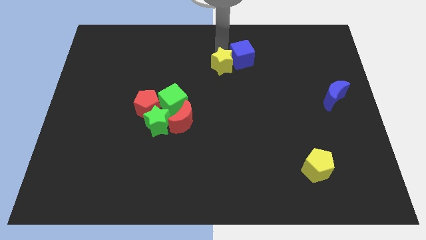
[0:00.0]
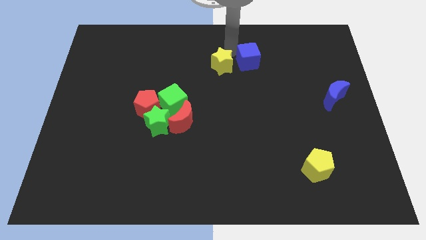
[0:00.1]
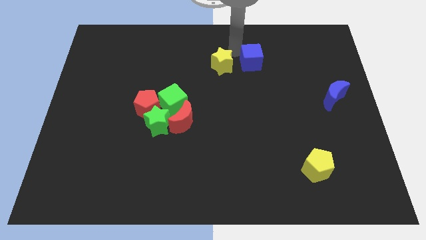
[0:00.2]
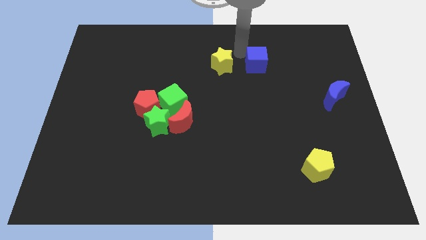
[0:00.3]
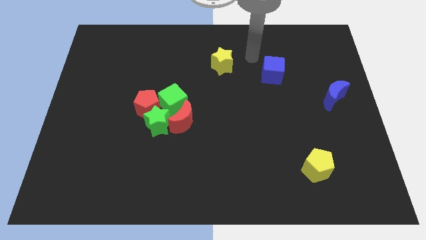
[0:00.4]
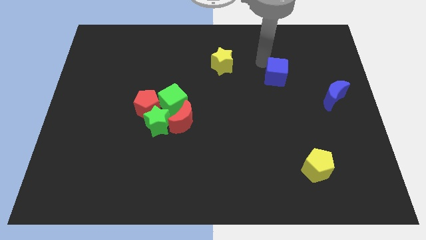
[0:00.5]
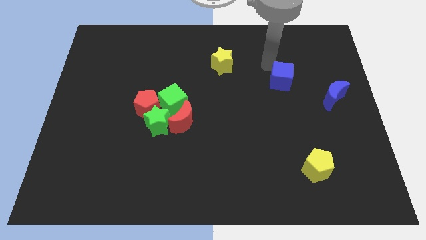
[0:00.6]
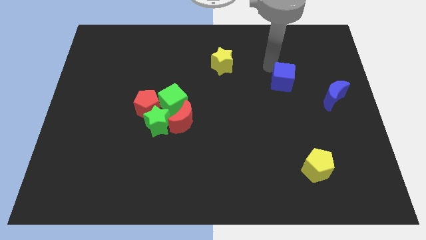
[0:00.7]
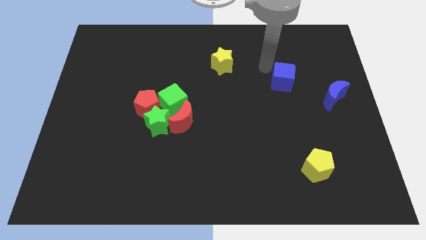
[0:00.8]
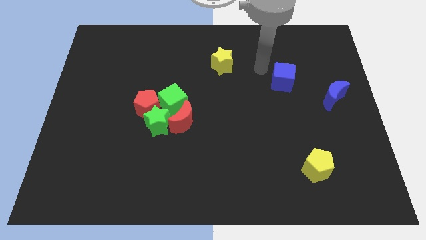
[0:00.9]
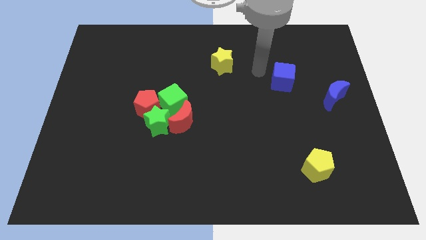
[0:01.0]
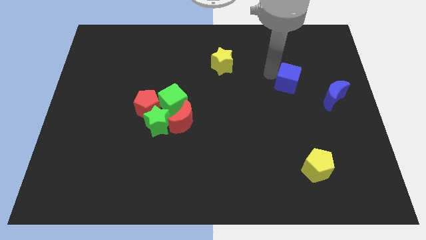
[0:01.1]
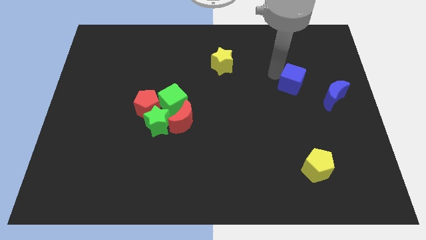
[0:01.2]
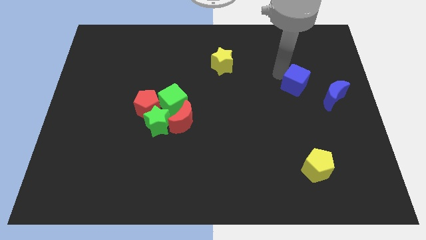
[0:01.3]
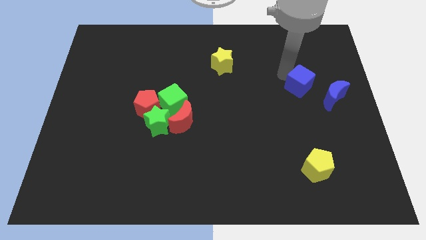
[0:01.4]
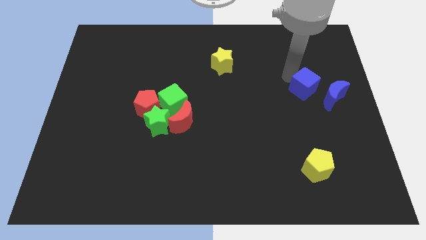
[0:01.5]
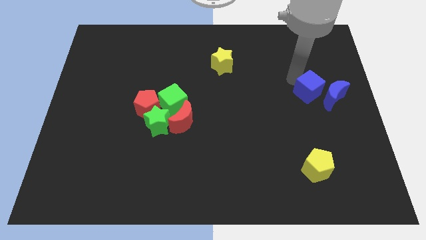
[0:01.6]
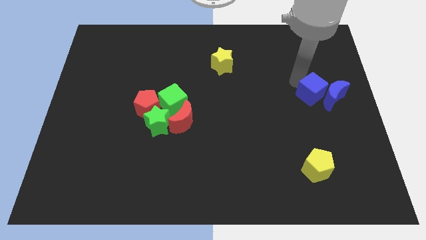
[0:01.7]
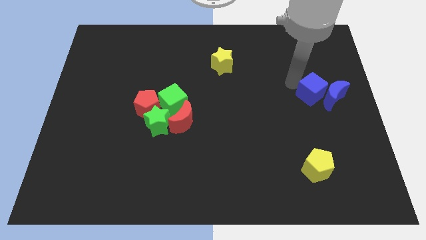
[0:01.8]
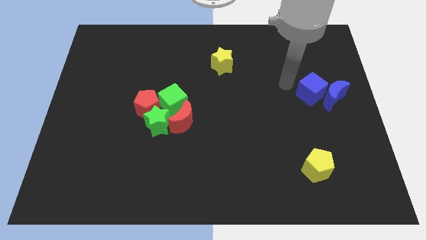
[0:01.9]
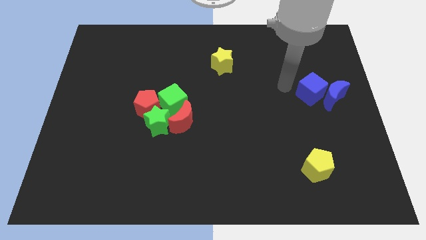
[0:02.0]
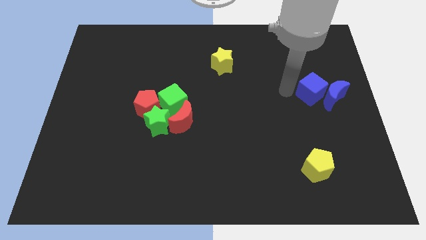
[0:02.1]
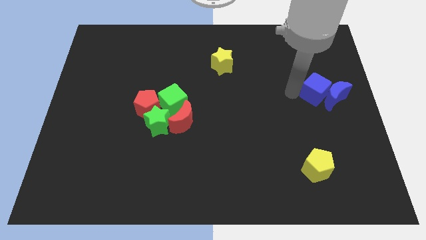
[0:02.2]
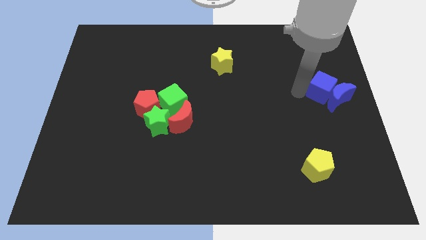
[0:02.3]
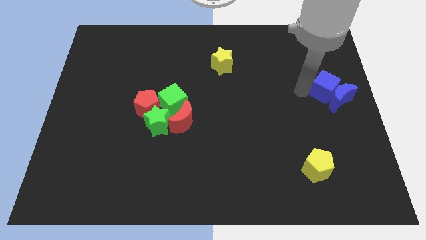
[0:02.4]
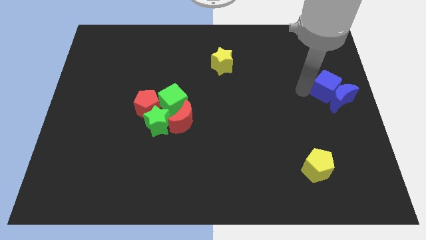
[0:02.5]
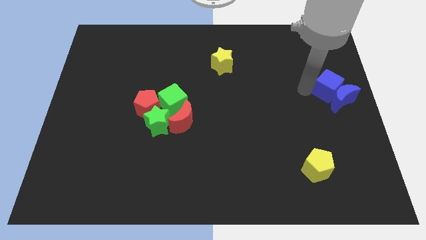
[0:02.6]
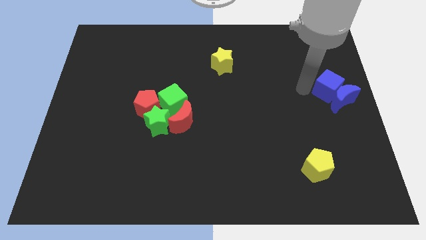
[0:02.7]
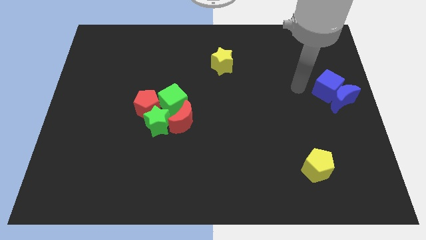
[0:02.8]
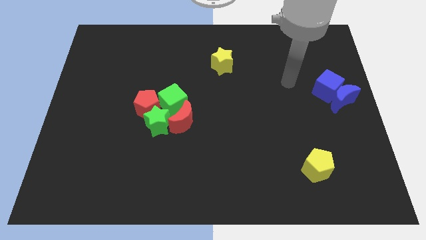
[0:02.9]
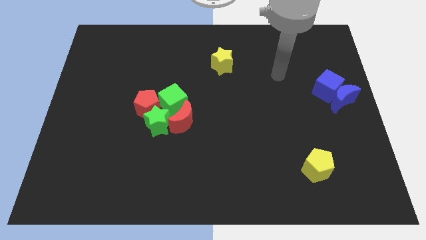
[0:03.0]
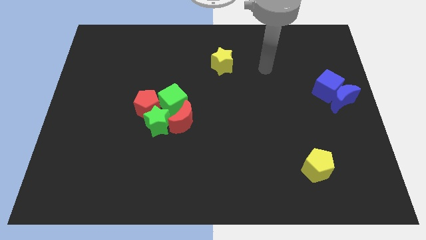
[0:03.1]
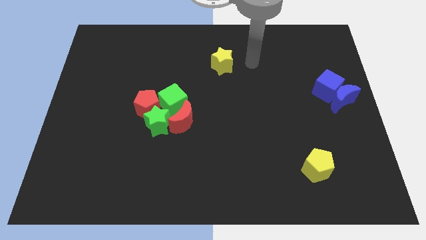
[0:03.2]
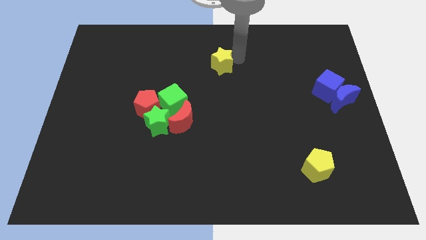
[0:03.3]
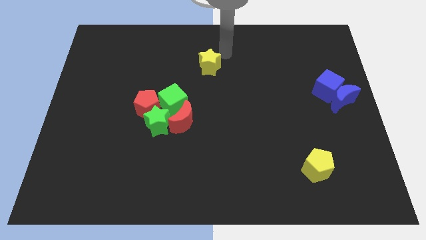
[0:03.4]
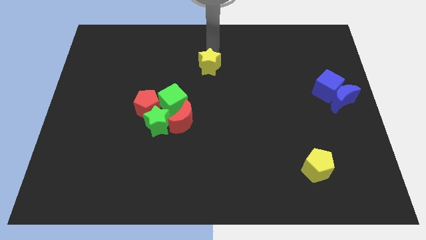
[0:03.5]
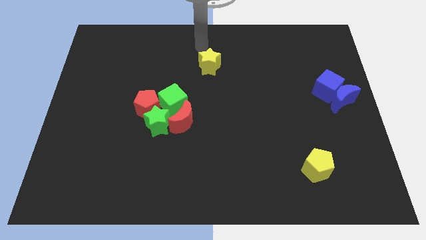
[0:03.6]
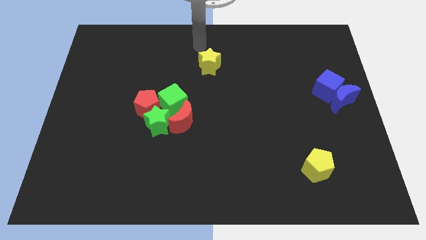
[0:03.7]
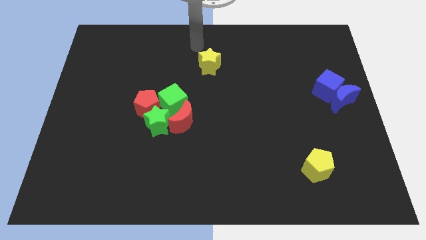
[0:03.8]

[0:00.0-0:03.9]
push the blue cube into the blue moon

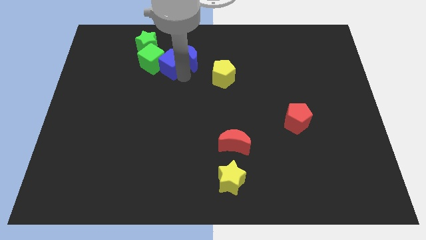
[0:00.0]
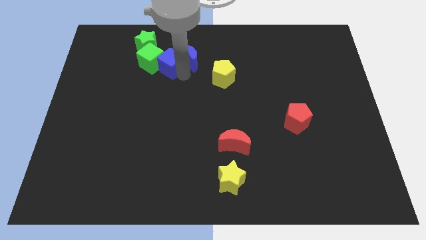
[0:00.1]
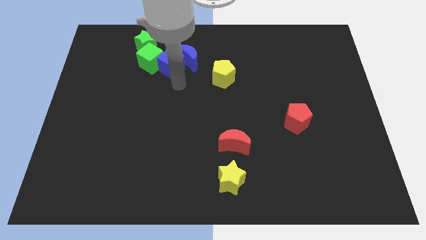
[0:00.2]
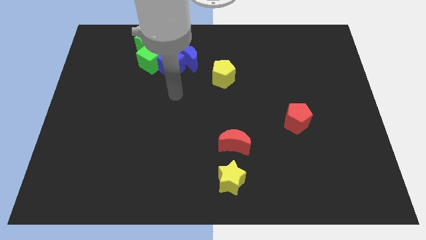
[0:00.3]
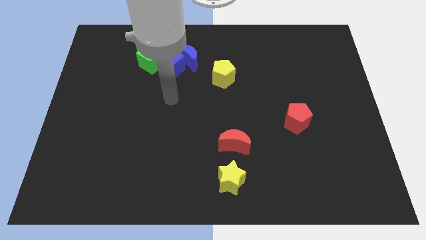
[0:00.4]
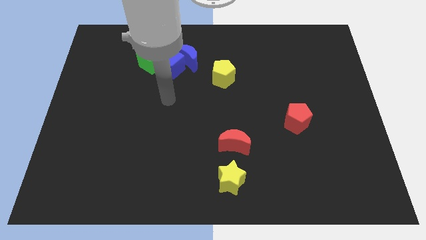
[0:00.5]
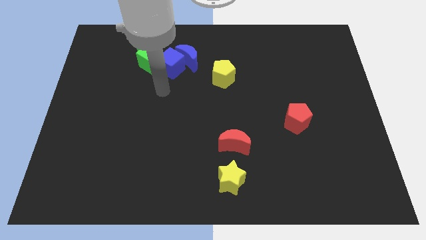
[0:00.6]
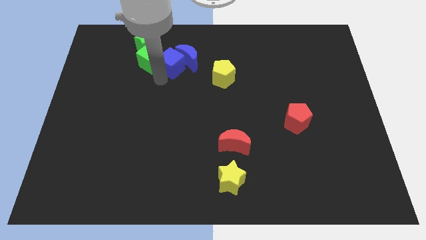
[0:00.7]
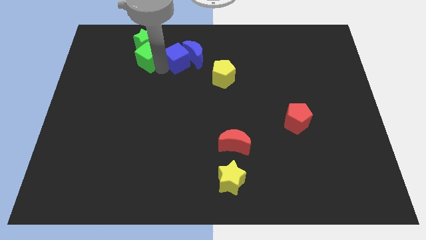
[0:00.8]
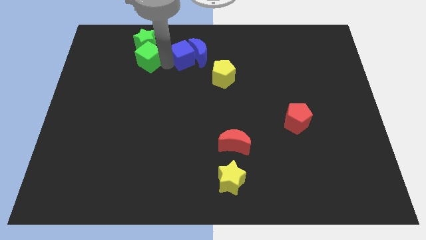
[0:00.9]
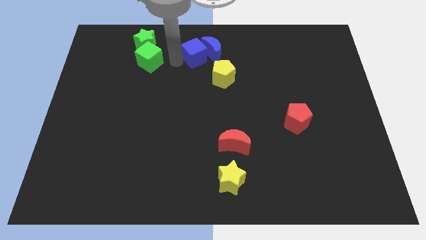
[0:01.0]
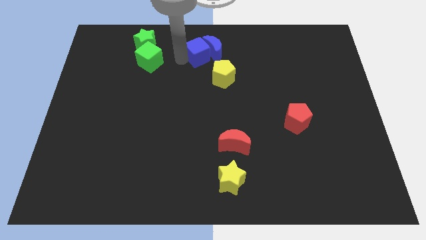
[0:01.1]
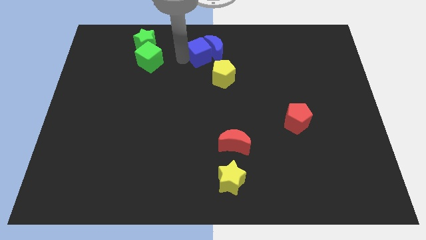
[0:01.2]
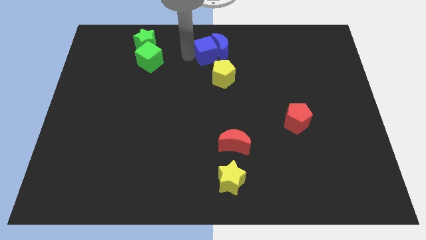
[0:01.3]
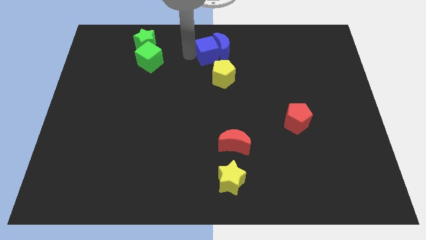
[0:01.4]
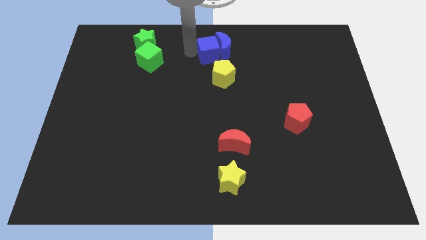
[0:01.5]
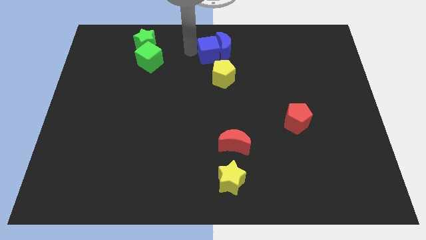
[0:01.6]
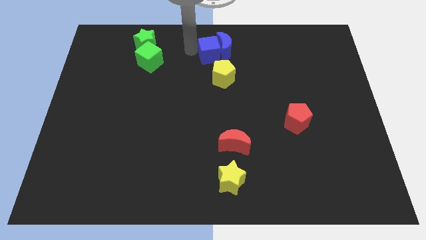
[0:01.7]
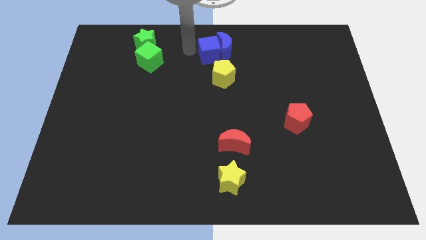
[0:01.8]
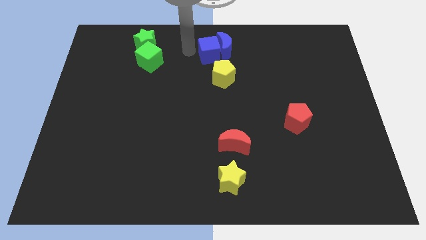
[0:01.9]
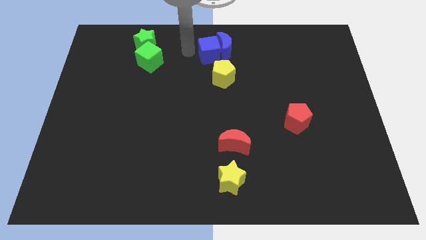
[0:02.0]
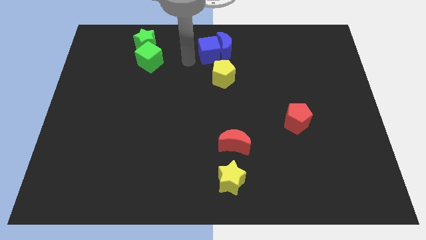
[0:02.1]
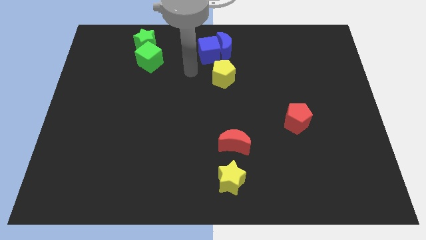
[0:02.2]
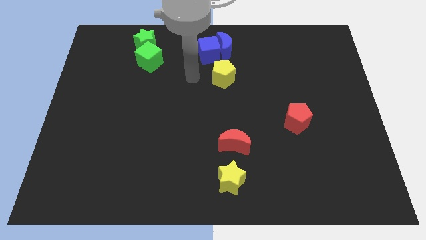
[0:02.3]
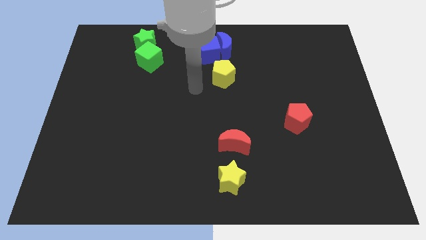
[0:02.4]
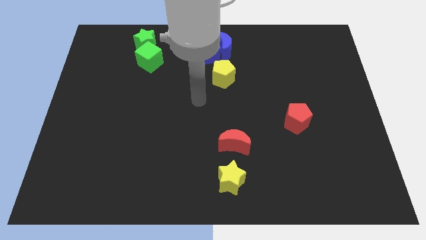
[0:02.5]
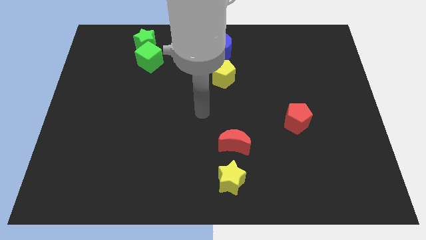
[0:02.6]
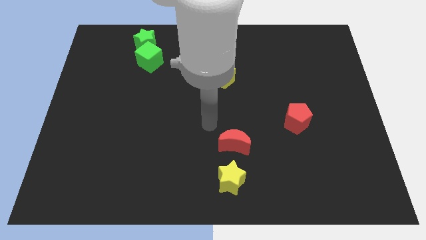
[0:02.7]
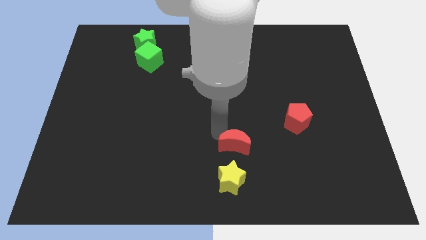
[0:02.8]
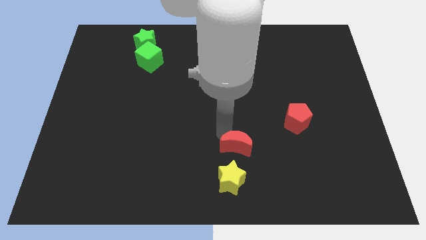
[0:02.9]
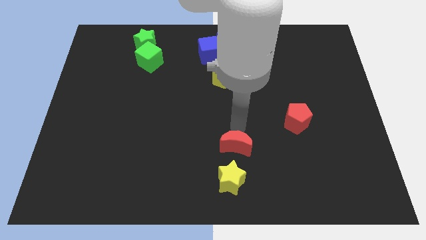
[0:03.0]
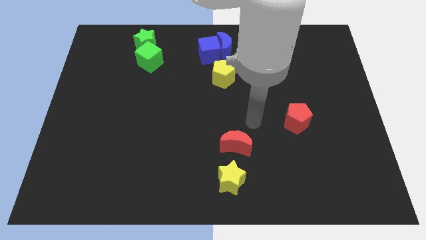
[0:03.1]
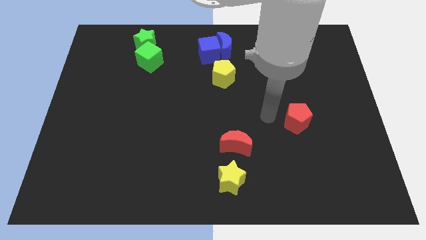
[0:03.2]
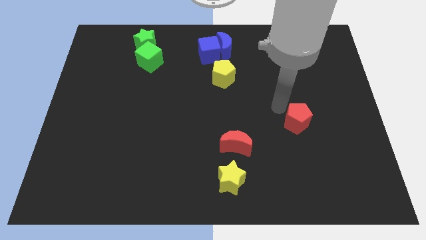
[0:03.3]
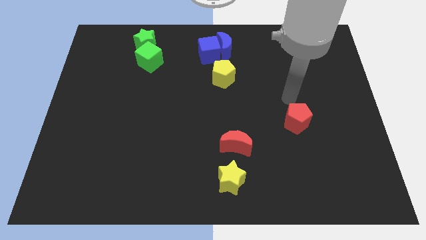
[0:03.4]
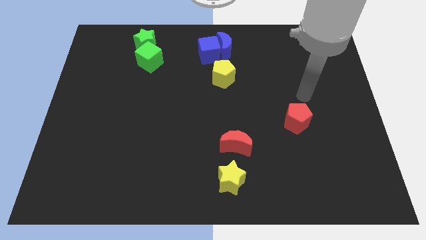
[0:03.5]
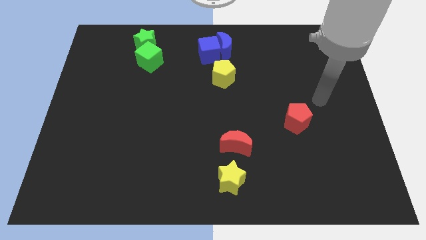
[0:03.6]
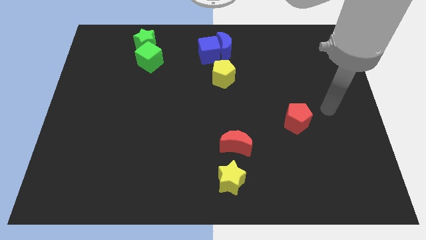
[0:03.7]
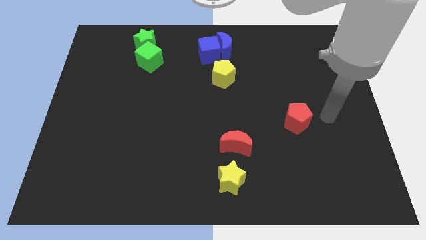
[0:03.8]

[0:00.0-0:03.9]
place the blue blocks above the yellow pentagon

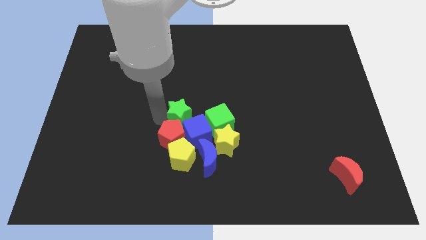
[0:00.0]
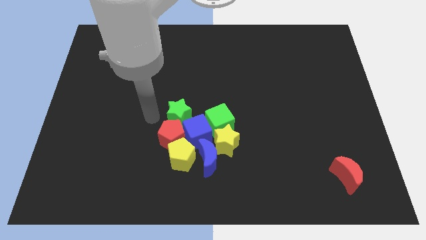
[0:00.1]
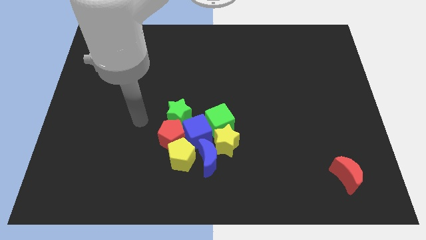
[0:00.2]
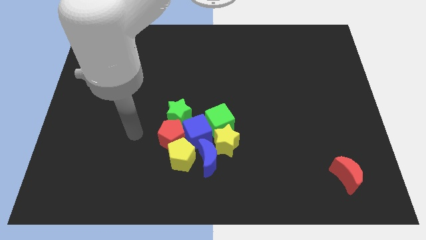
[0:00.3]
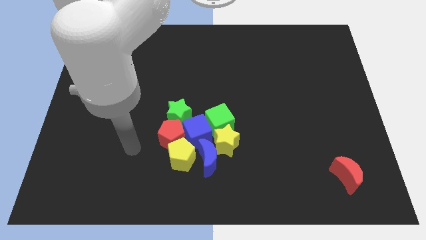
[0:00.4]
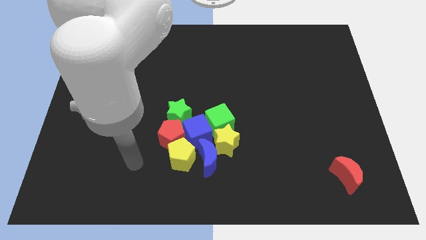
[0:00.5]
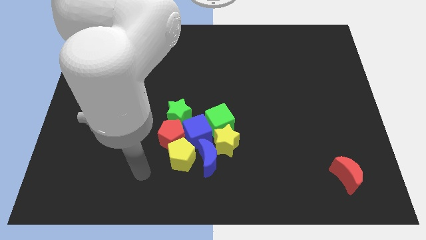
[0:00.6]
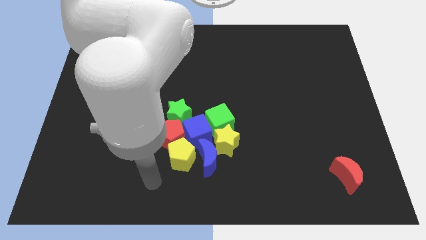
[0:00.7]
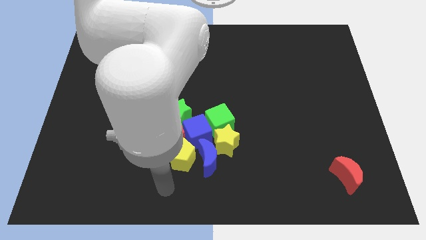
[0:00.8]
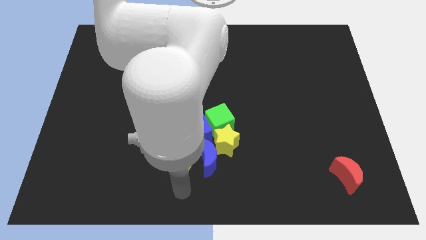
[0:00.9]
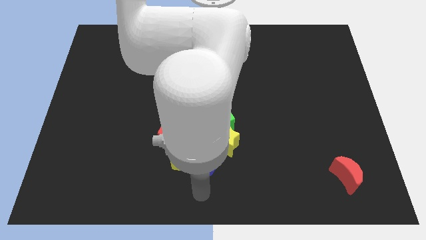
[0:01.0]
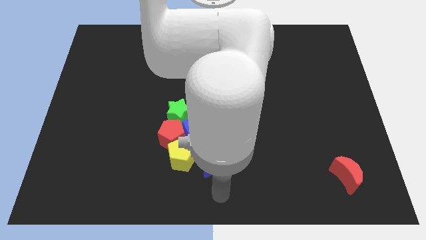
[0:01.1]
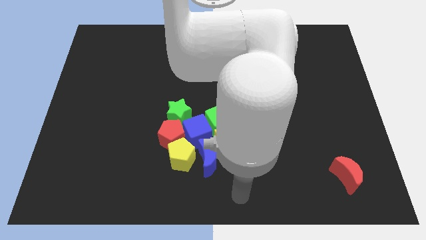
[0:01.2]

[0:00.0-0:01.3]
move the arm away from the green star
